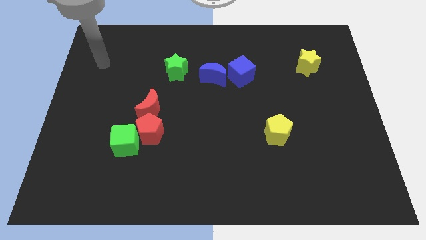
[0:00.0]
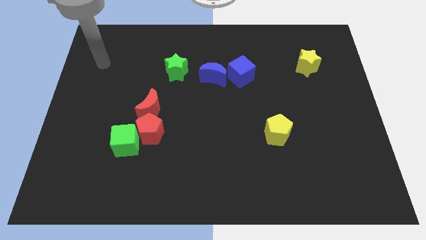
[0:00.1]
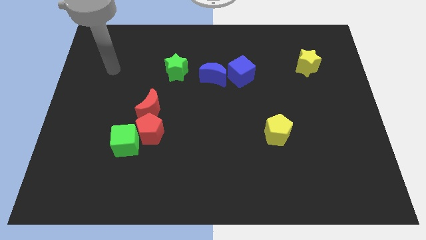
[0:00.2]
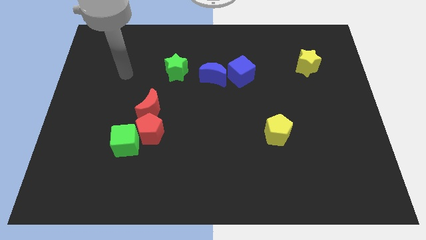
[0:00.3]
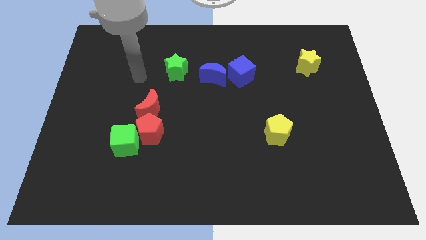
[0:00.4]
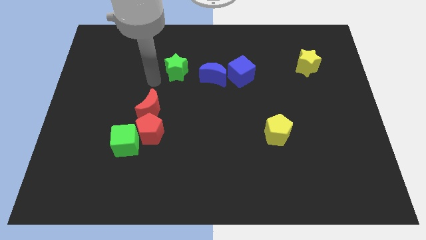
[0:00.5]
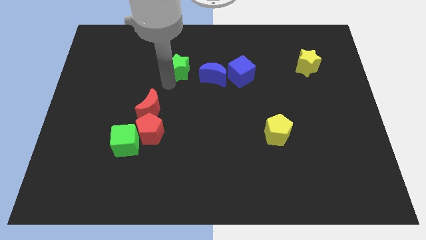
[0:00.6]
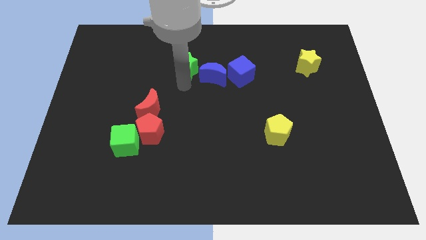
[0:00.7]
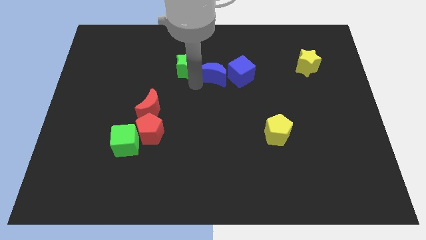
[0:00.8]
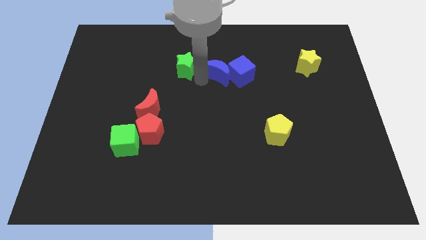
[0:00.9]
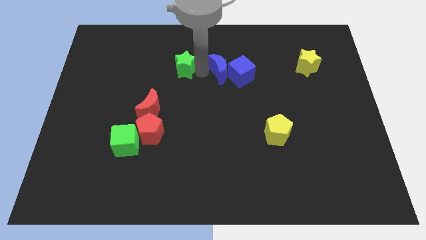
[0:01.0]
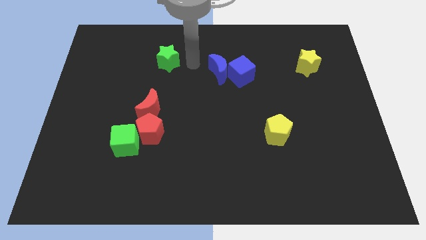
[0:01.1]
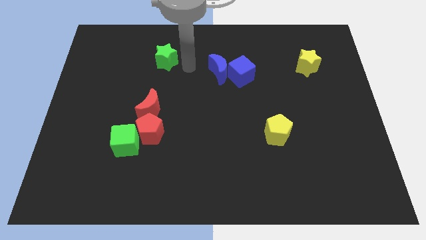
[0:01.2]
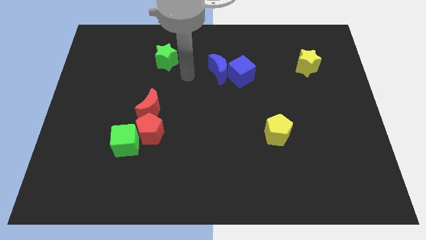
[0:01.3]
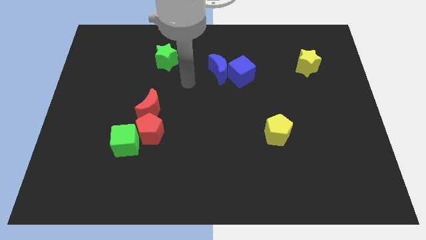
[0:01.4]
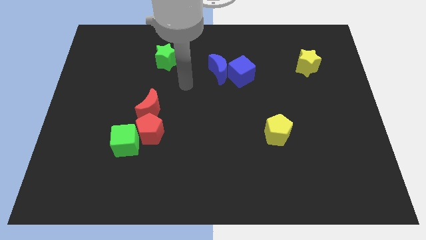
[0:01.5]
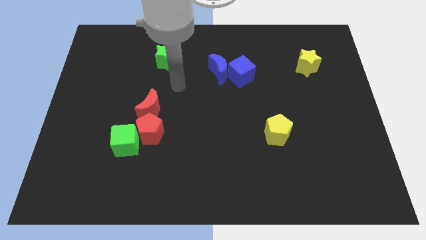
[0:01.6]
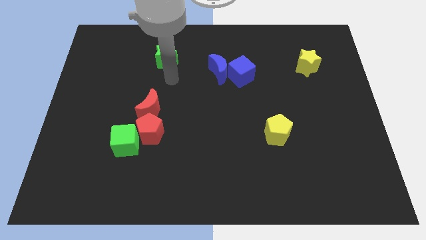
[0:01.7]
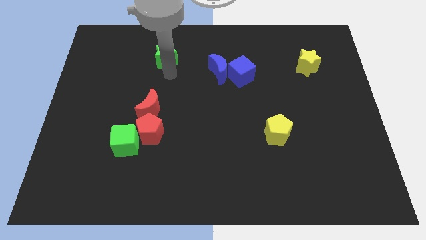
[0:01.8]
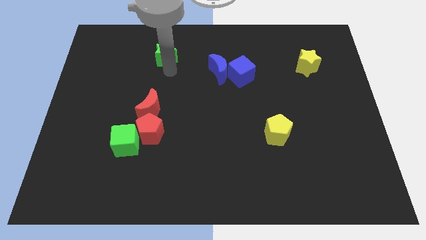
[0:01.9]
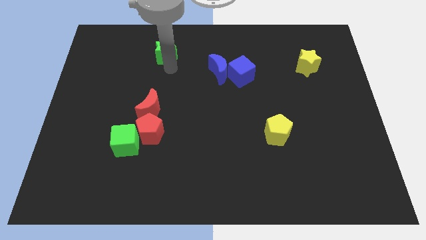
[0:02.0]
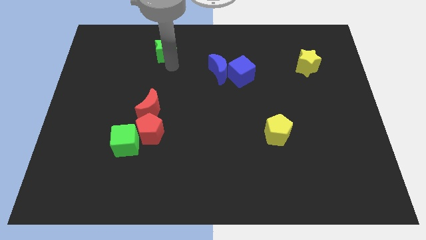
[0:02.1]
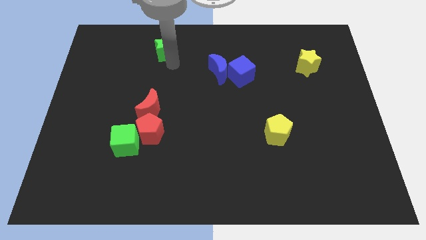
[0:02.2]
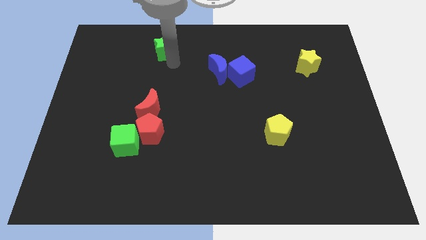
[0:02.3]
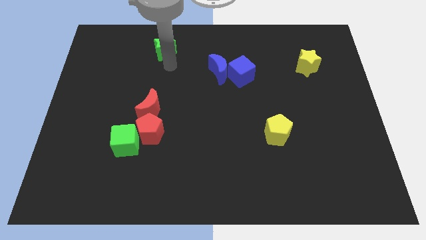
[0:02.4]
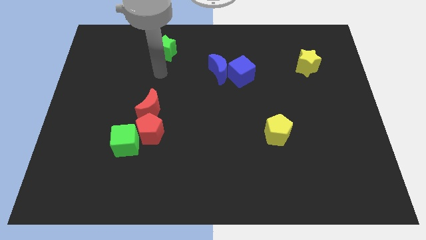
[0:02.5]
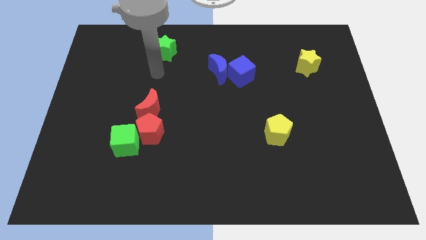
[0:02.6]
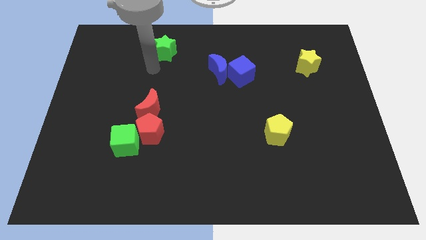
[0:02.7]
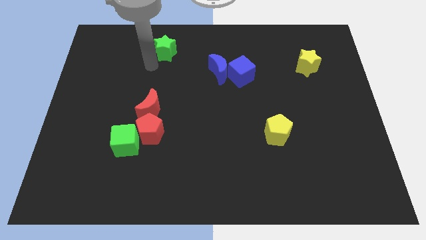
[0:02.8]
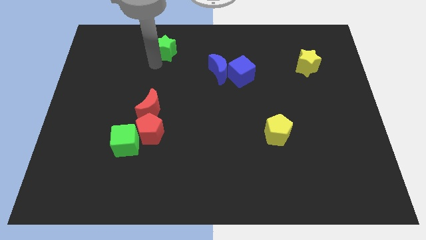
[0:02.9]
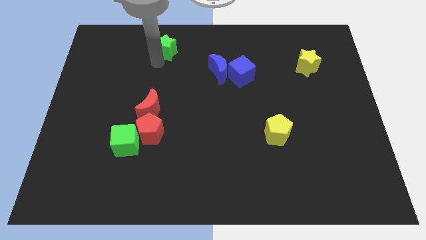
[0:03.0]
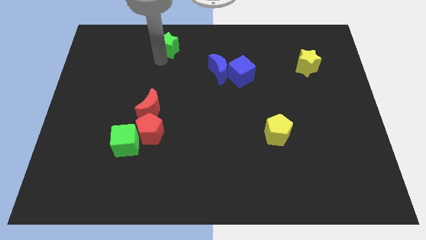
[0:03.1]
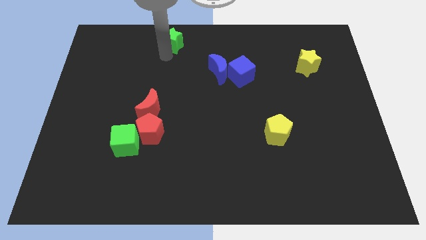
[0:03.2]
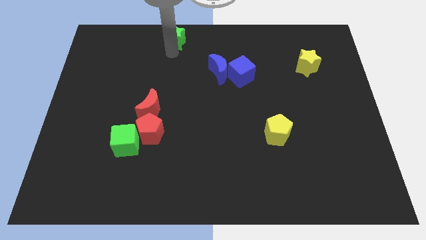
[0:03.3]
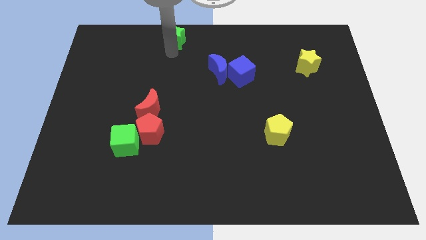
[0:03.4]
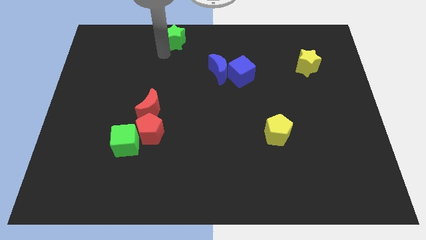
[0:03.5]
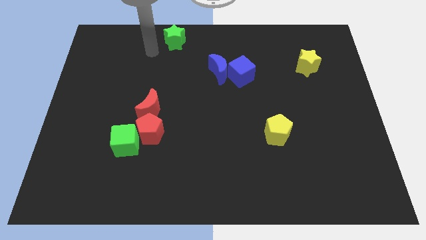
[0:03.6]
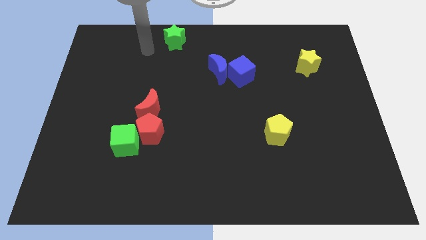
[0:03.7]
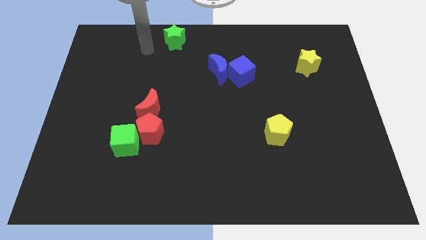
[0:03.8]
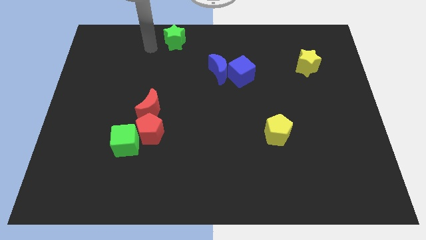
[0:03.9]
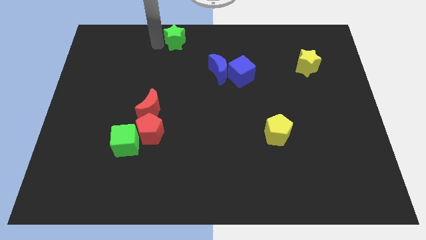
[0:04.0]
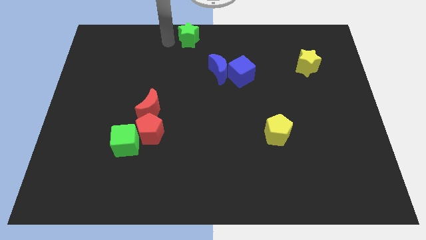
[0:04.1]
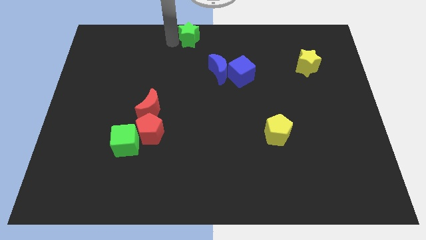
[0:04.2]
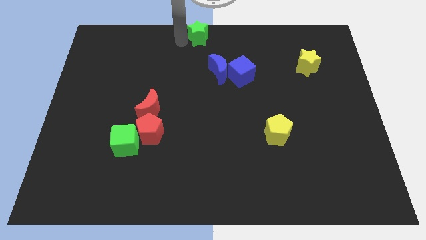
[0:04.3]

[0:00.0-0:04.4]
push the green star to the top center of the board

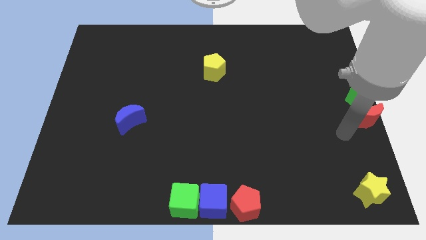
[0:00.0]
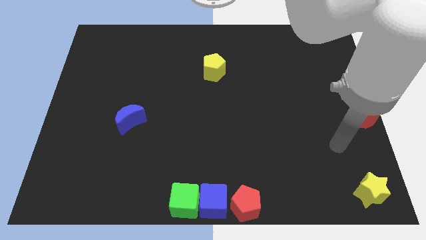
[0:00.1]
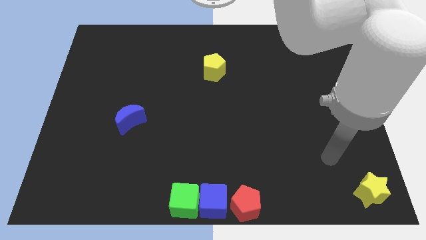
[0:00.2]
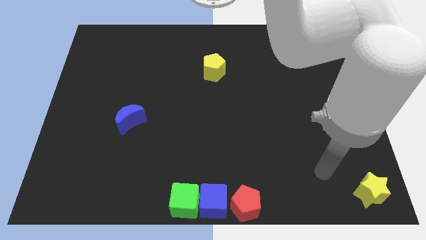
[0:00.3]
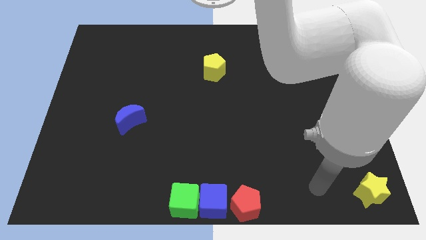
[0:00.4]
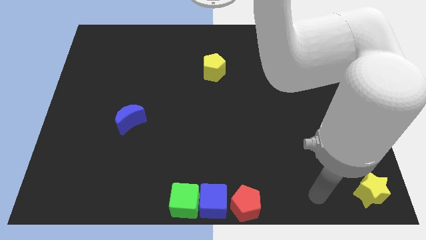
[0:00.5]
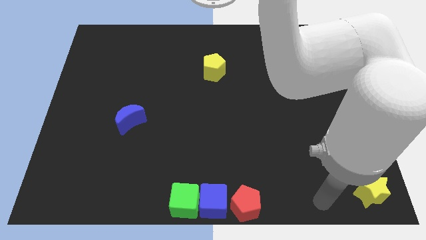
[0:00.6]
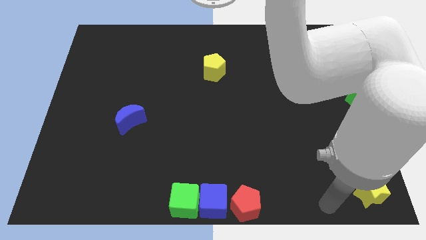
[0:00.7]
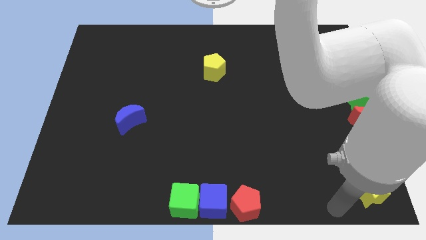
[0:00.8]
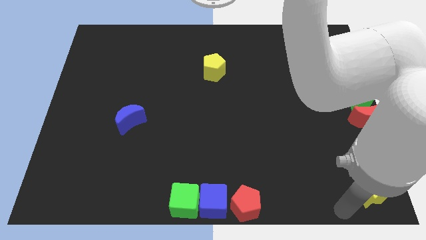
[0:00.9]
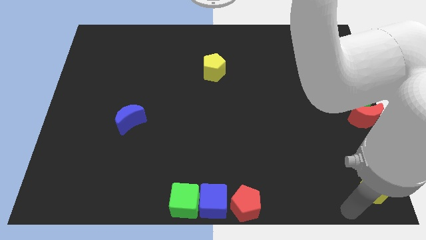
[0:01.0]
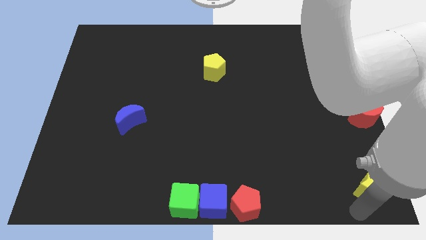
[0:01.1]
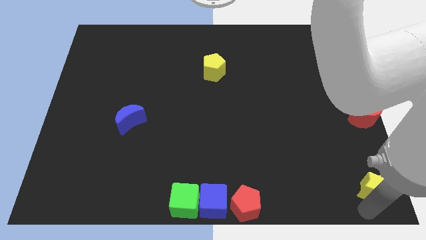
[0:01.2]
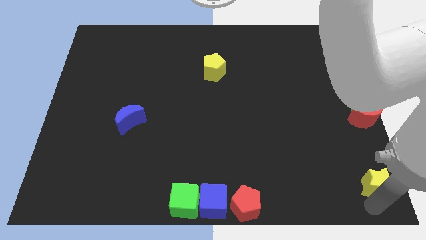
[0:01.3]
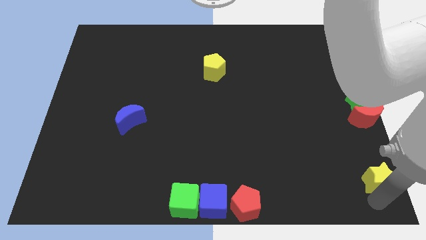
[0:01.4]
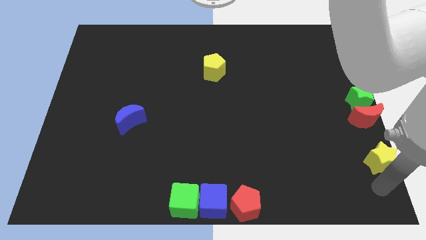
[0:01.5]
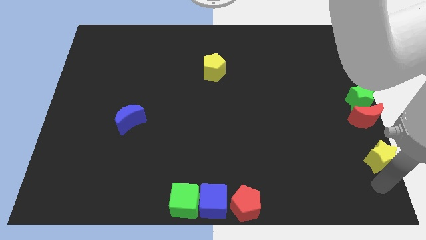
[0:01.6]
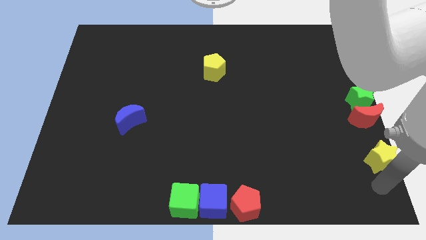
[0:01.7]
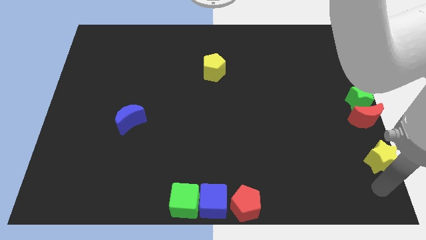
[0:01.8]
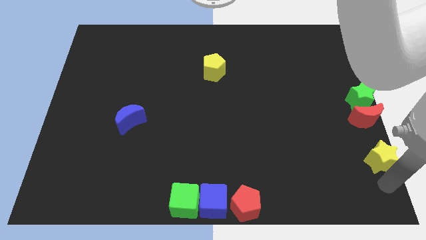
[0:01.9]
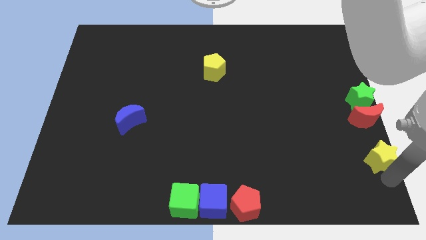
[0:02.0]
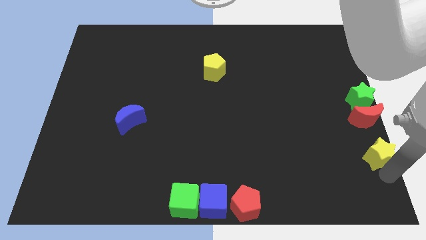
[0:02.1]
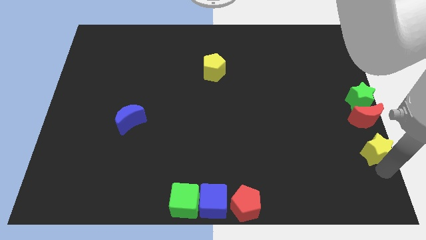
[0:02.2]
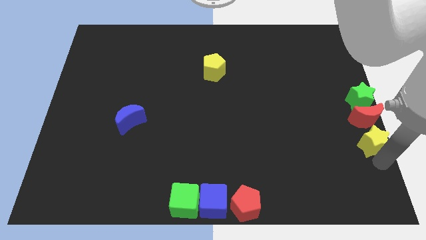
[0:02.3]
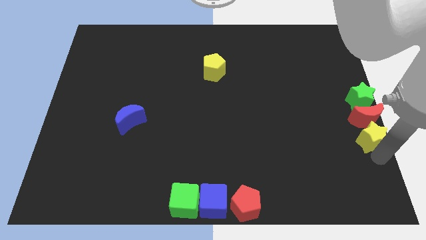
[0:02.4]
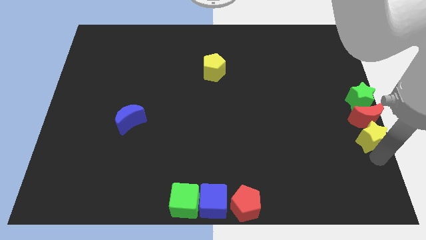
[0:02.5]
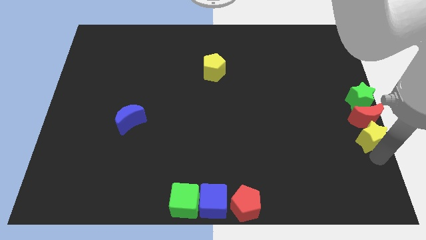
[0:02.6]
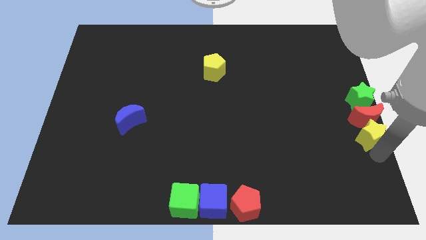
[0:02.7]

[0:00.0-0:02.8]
move yellow star towards red moon

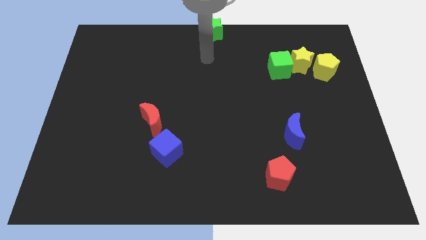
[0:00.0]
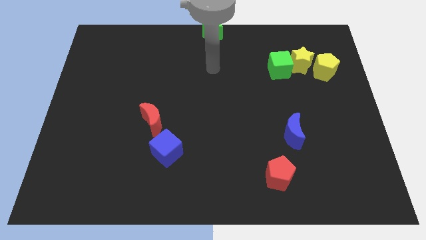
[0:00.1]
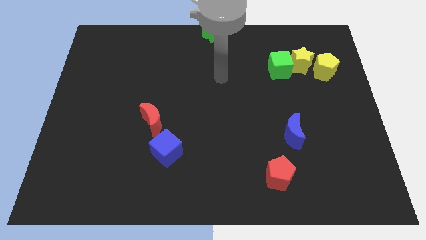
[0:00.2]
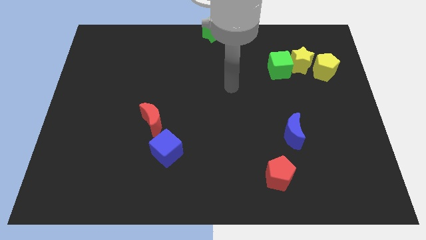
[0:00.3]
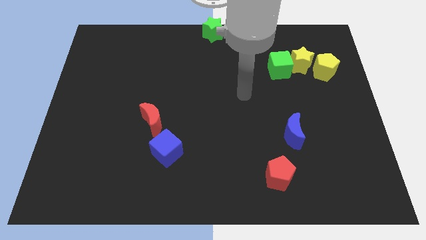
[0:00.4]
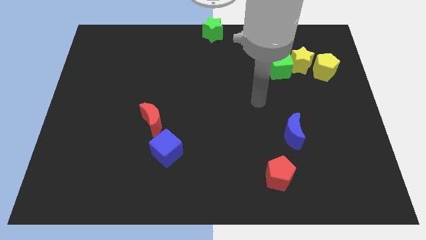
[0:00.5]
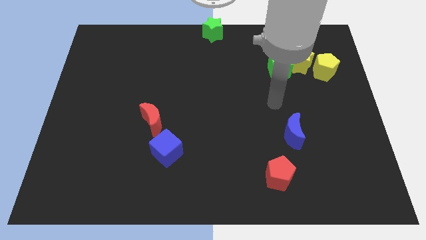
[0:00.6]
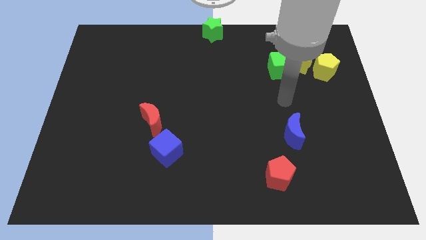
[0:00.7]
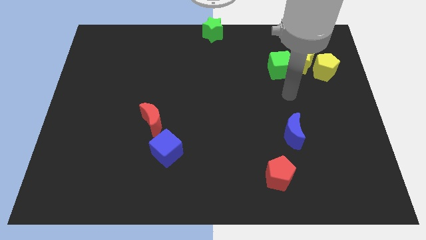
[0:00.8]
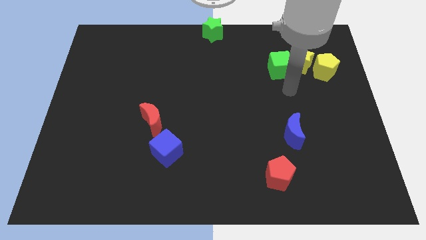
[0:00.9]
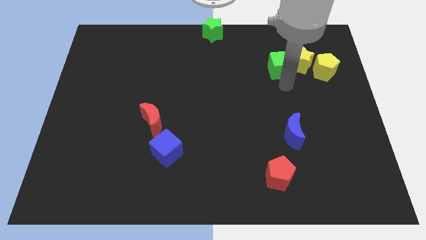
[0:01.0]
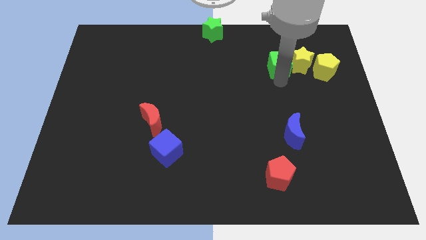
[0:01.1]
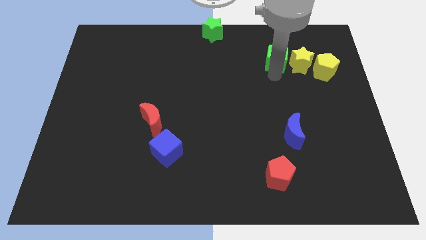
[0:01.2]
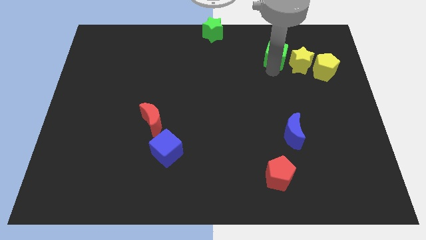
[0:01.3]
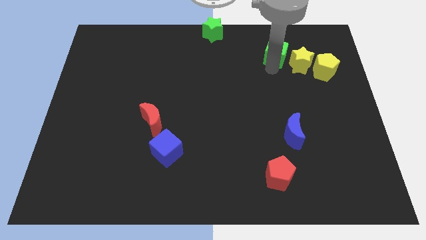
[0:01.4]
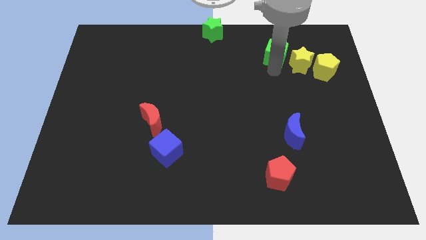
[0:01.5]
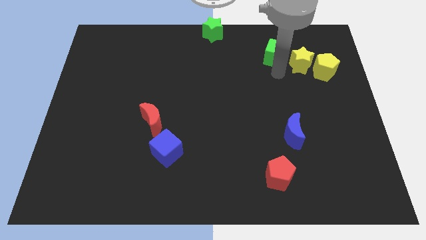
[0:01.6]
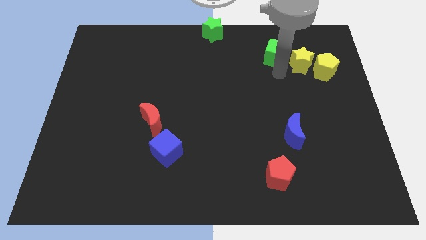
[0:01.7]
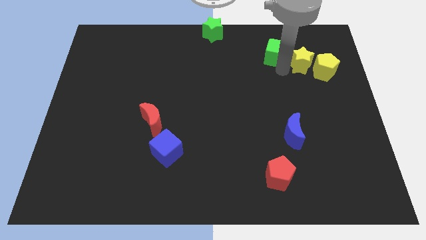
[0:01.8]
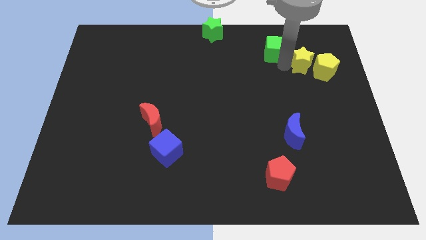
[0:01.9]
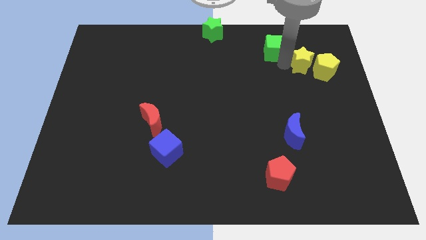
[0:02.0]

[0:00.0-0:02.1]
push the green cube slightly towards the top
